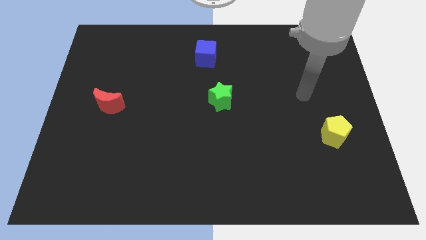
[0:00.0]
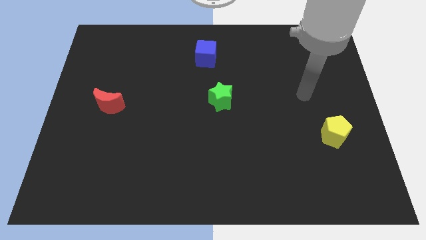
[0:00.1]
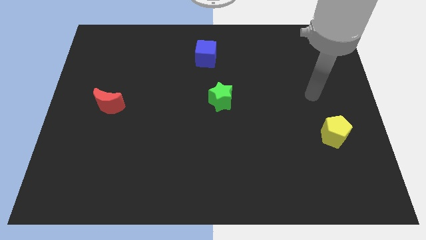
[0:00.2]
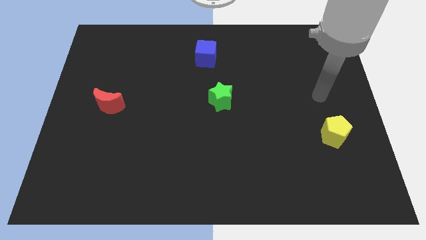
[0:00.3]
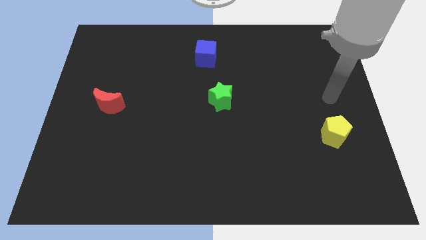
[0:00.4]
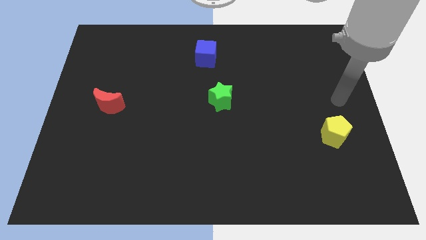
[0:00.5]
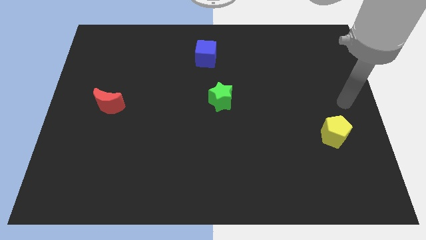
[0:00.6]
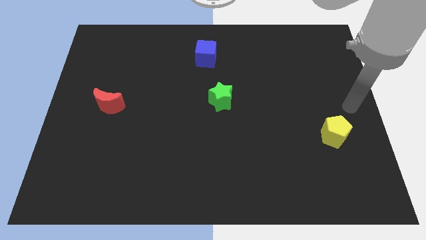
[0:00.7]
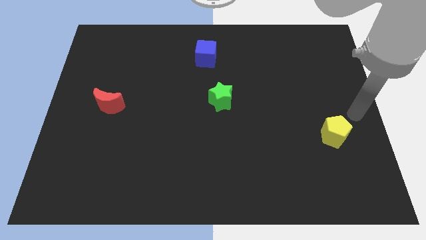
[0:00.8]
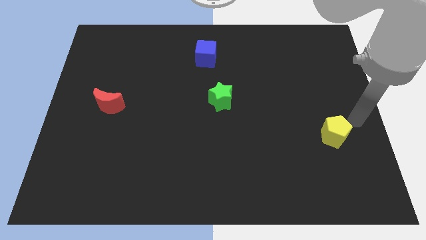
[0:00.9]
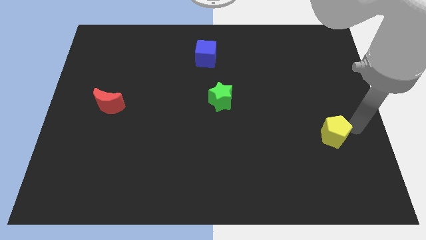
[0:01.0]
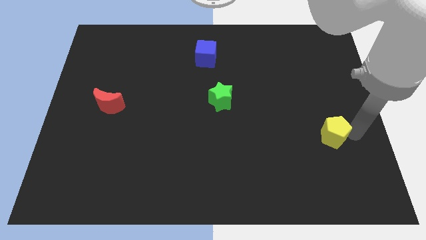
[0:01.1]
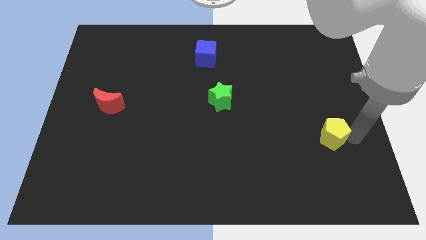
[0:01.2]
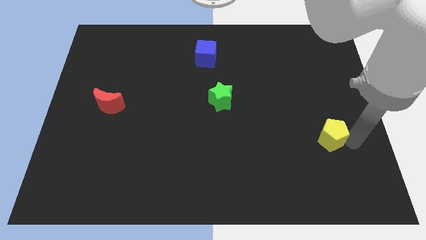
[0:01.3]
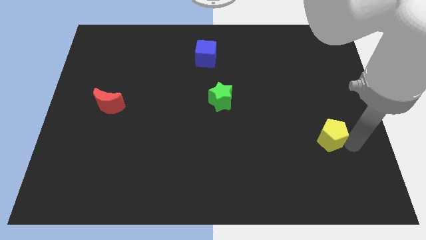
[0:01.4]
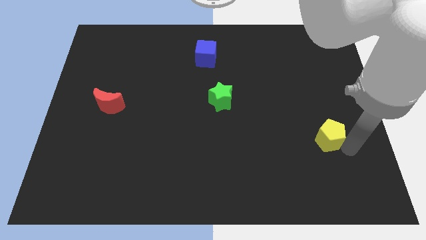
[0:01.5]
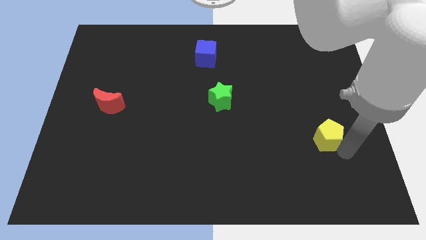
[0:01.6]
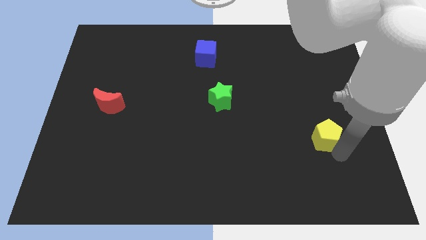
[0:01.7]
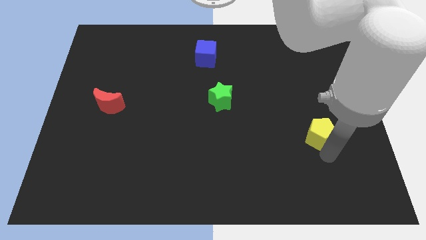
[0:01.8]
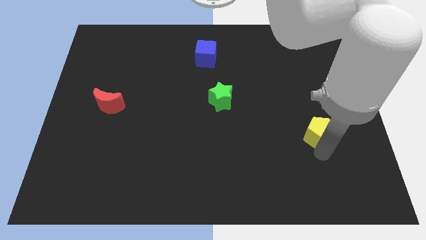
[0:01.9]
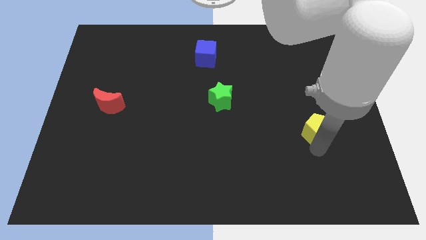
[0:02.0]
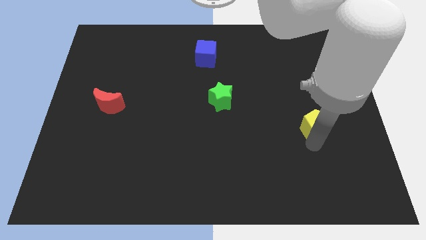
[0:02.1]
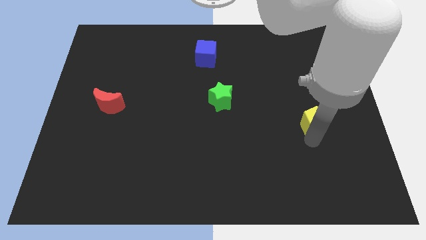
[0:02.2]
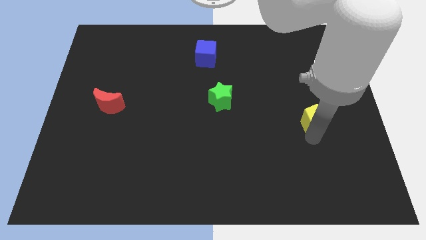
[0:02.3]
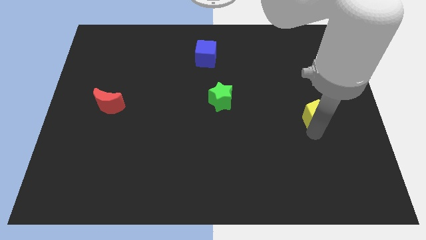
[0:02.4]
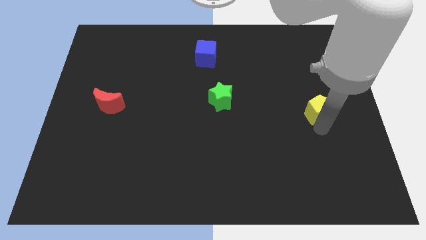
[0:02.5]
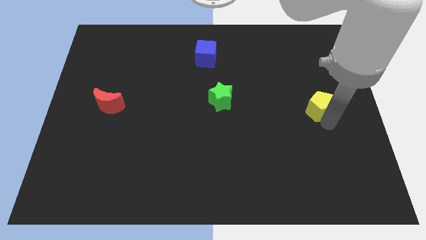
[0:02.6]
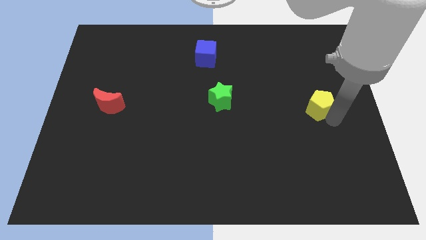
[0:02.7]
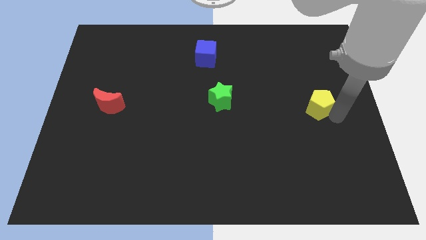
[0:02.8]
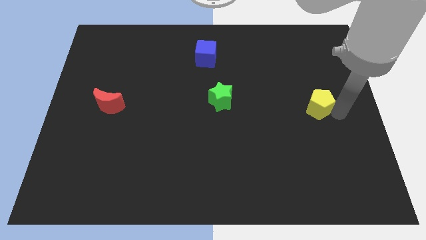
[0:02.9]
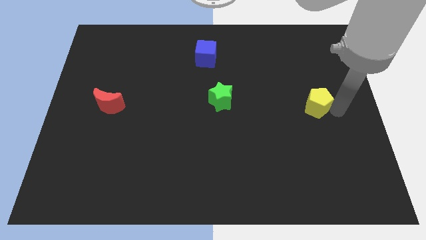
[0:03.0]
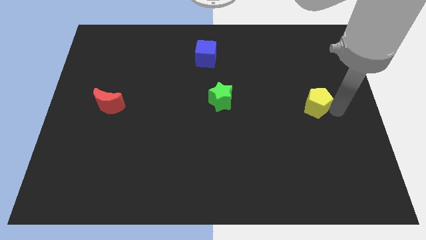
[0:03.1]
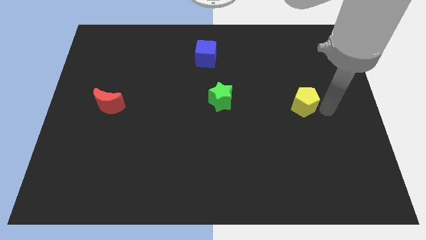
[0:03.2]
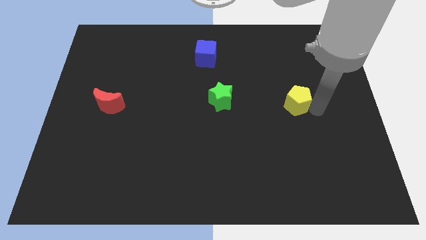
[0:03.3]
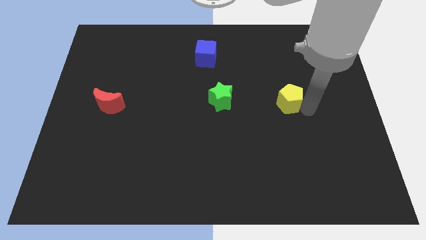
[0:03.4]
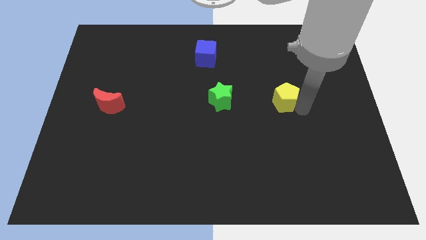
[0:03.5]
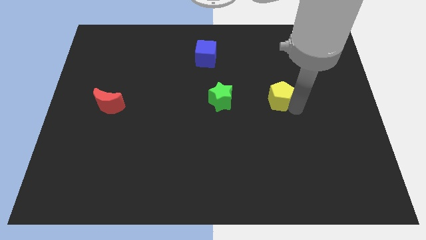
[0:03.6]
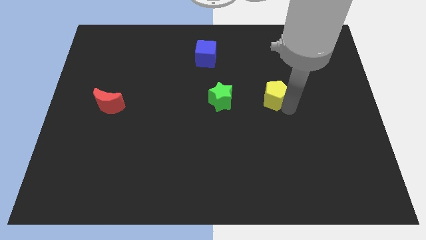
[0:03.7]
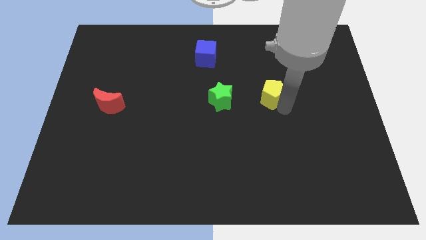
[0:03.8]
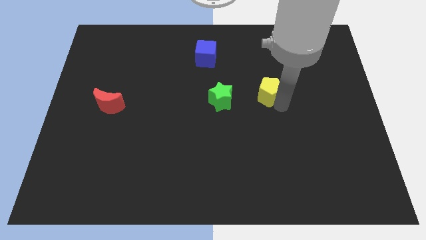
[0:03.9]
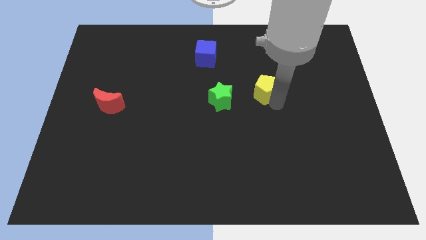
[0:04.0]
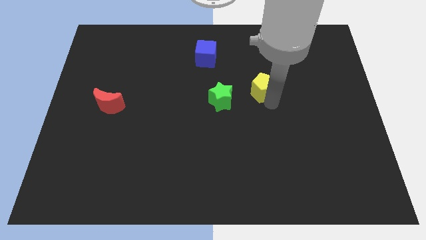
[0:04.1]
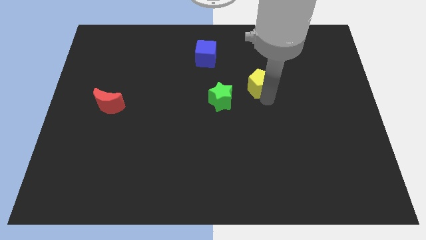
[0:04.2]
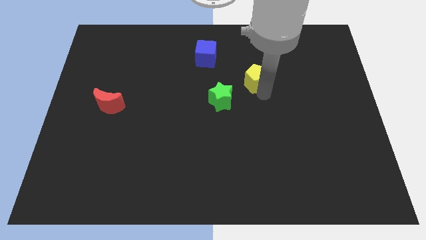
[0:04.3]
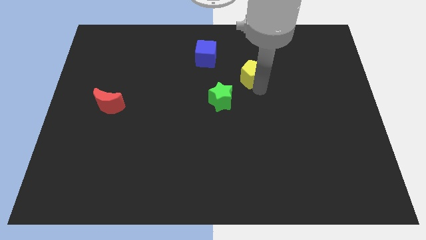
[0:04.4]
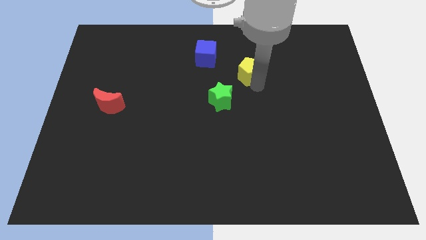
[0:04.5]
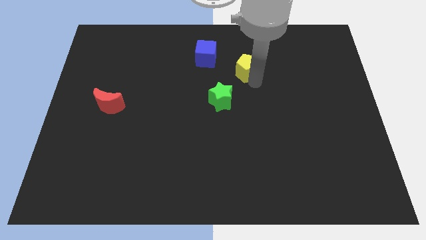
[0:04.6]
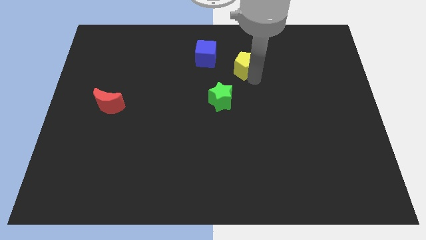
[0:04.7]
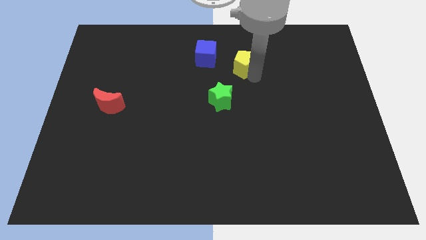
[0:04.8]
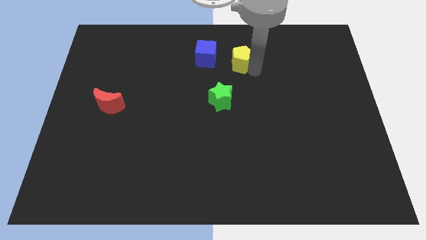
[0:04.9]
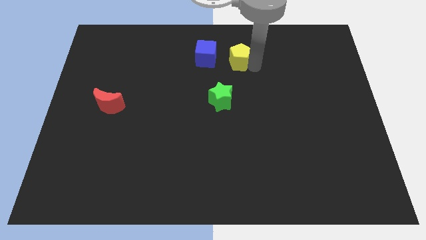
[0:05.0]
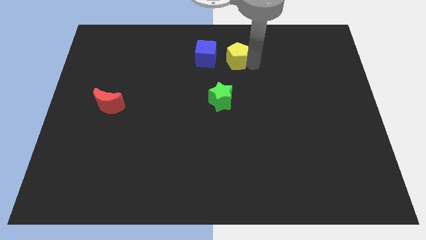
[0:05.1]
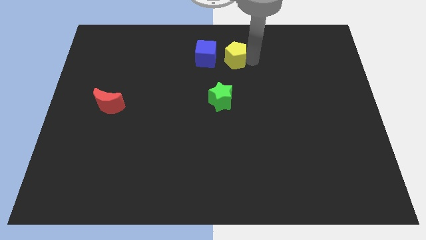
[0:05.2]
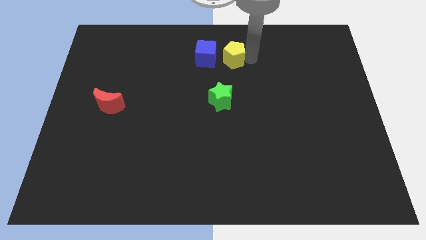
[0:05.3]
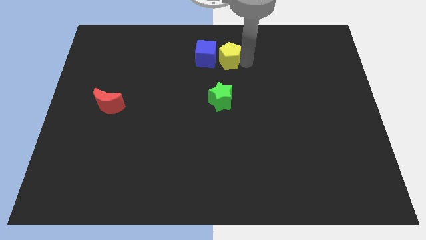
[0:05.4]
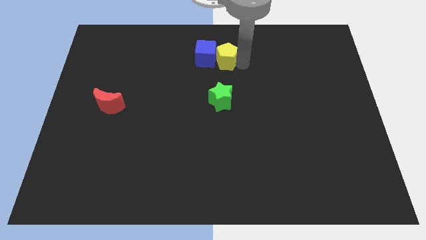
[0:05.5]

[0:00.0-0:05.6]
push the yellow block to the cube

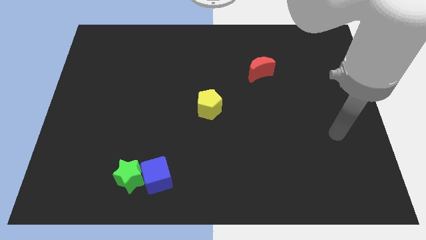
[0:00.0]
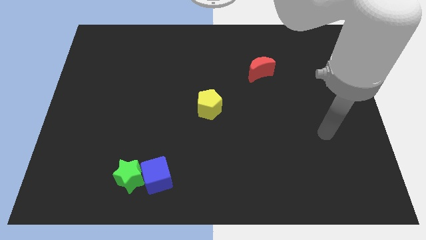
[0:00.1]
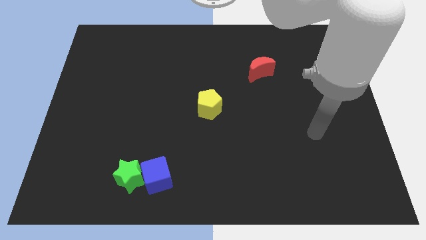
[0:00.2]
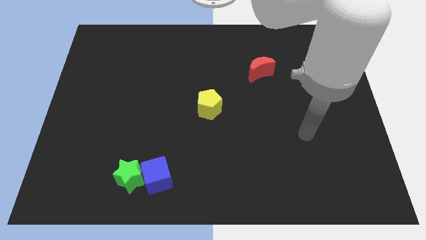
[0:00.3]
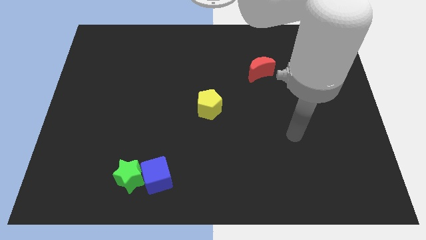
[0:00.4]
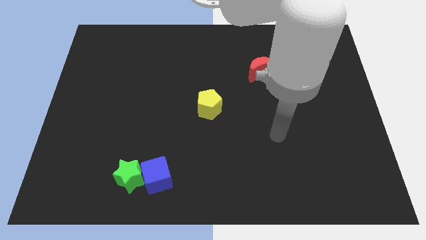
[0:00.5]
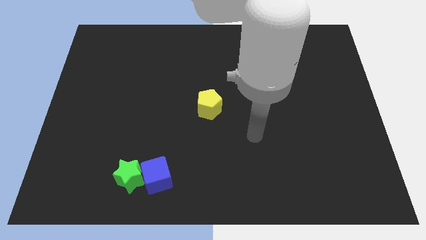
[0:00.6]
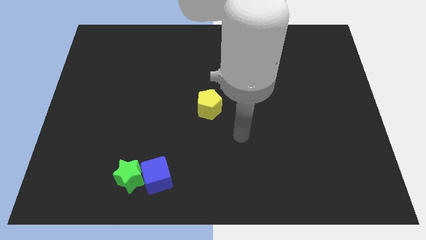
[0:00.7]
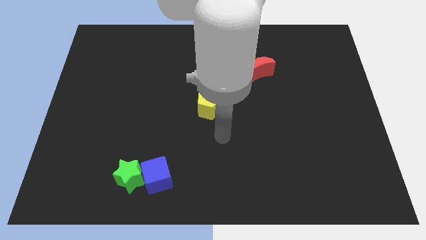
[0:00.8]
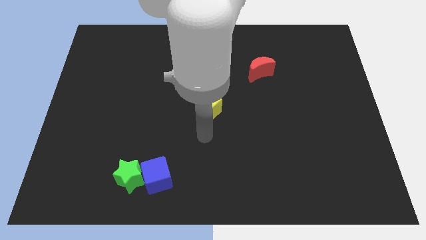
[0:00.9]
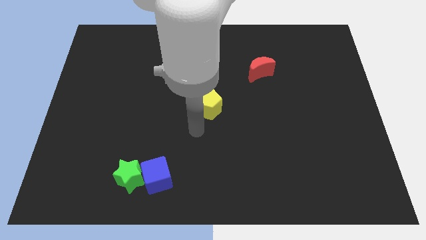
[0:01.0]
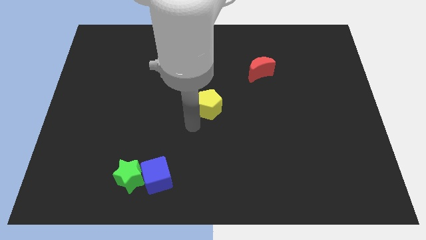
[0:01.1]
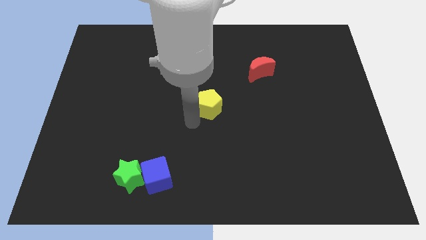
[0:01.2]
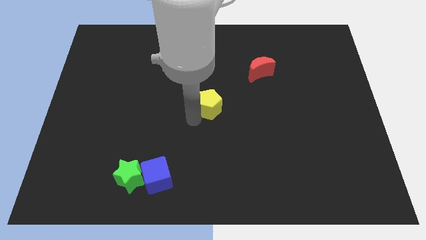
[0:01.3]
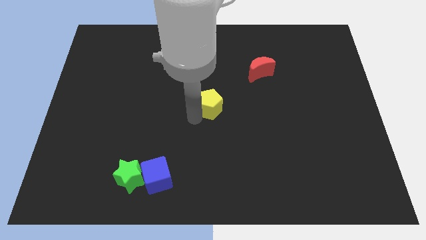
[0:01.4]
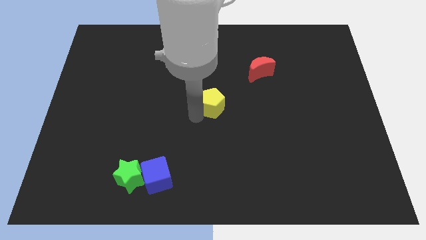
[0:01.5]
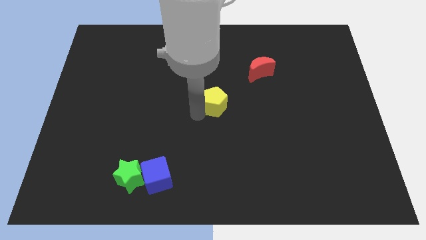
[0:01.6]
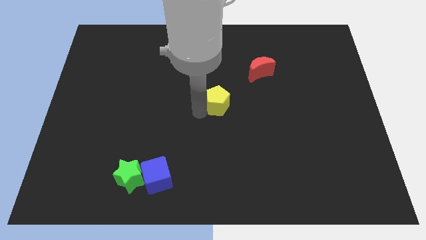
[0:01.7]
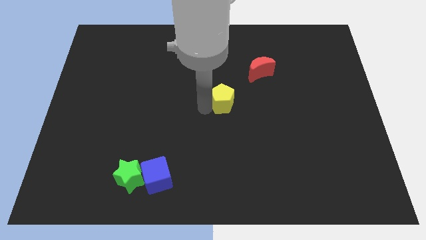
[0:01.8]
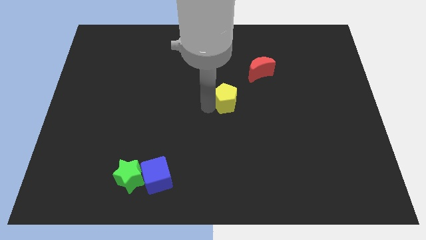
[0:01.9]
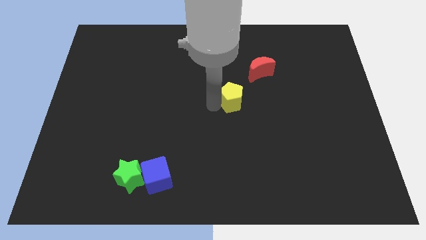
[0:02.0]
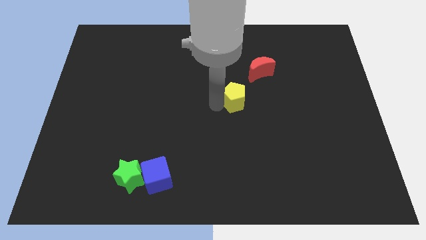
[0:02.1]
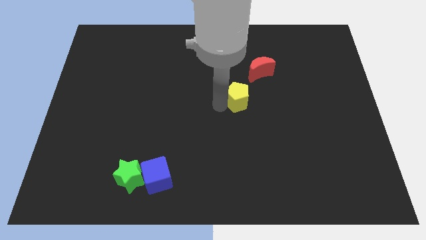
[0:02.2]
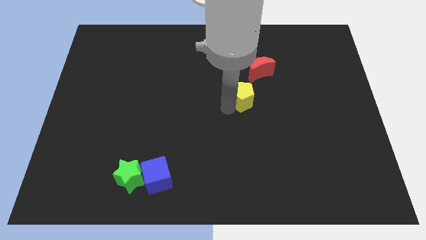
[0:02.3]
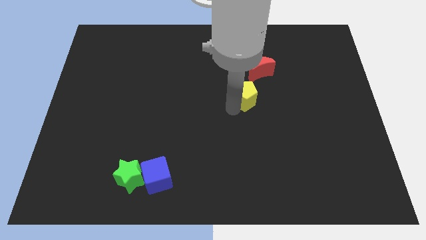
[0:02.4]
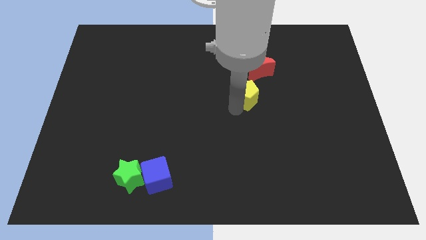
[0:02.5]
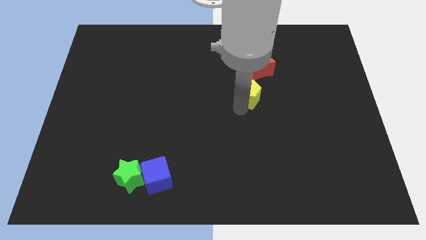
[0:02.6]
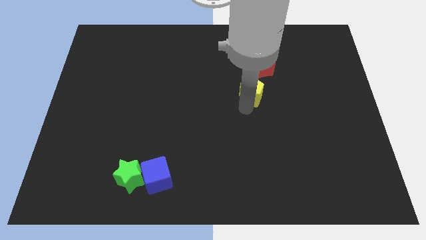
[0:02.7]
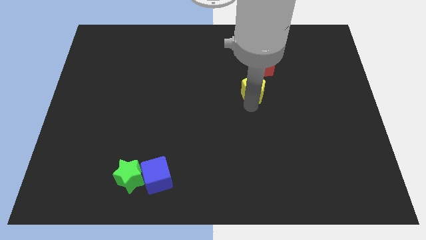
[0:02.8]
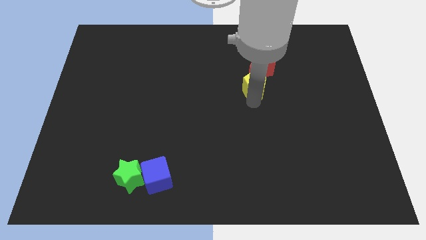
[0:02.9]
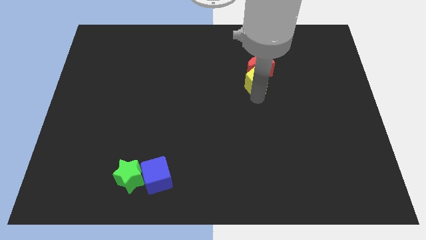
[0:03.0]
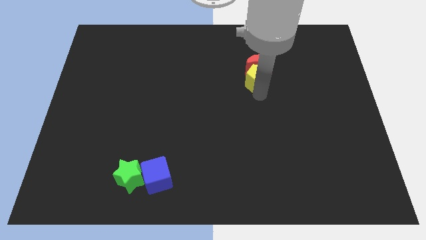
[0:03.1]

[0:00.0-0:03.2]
slide the yellow block next to the red block
